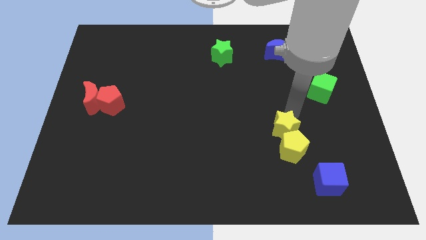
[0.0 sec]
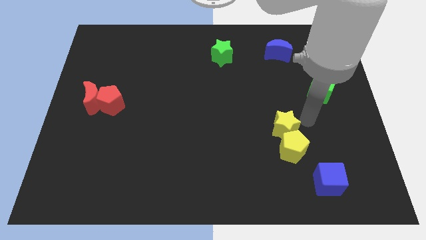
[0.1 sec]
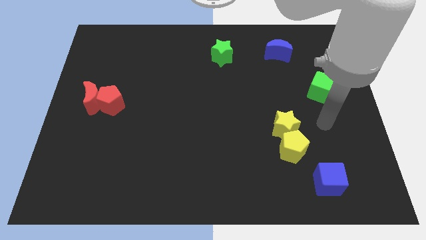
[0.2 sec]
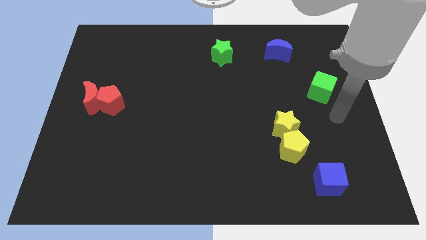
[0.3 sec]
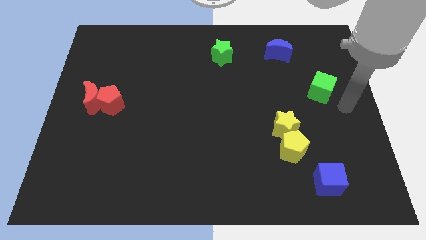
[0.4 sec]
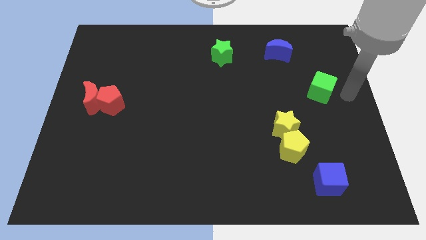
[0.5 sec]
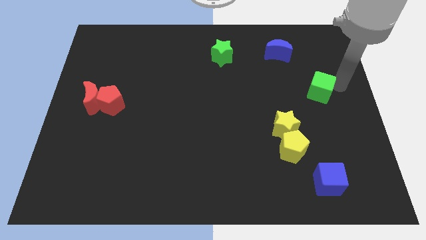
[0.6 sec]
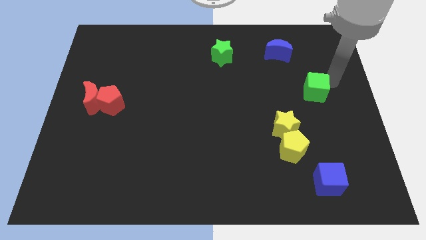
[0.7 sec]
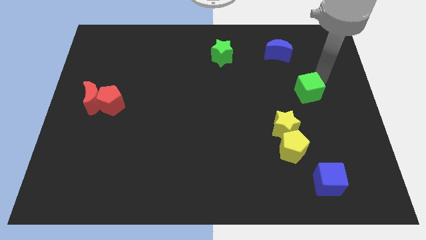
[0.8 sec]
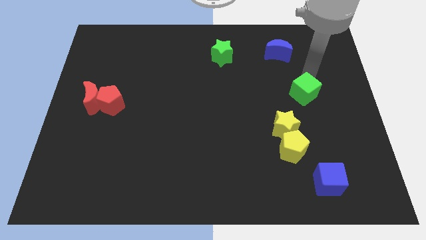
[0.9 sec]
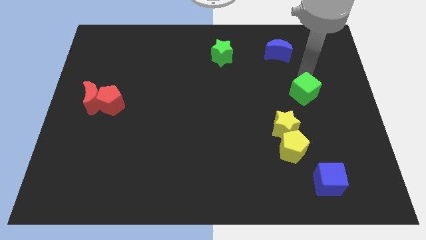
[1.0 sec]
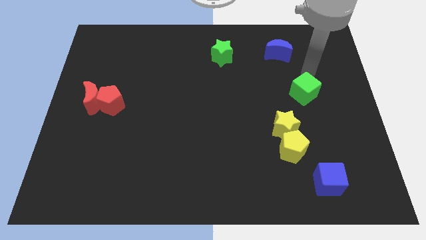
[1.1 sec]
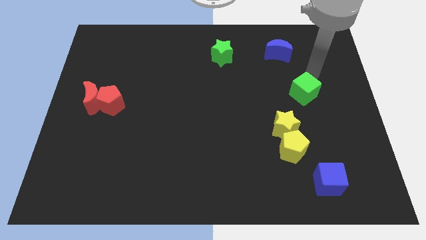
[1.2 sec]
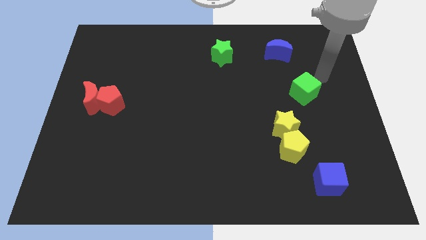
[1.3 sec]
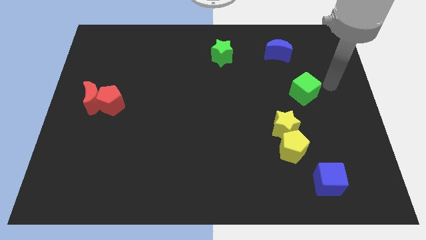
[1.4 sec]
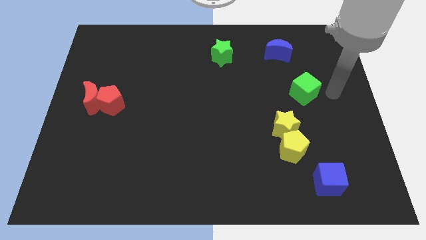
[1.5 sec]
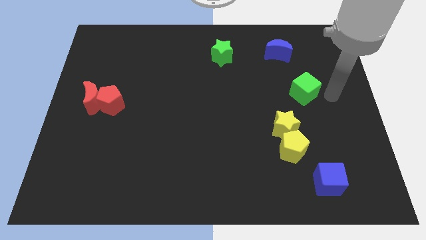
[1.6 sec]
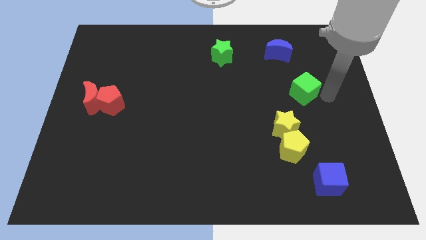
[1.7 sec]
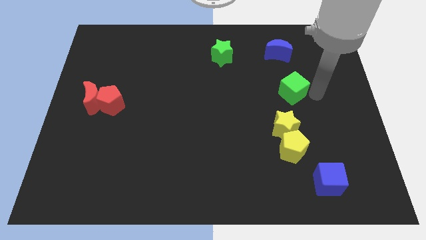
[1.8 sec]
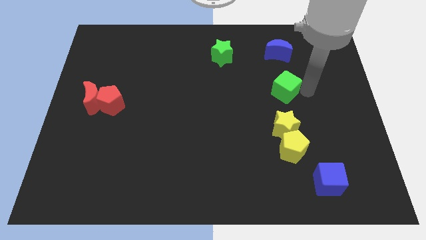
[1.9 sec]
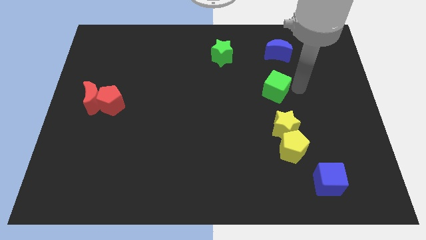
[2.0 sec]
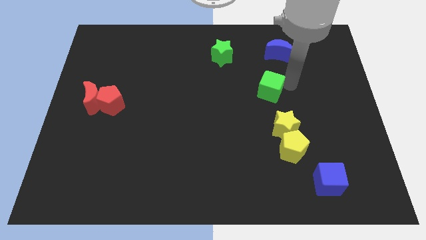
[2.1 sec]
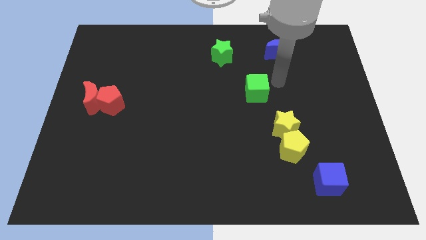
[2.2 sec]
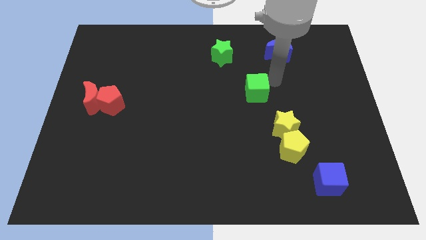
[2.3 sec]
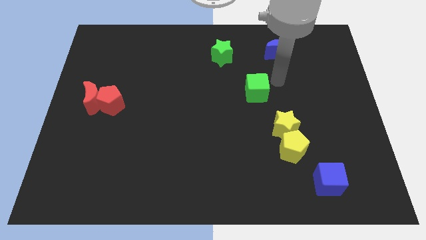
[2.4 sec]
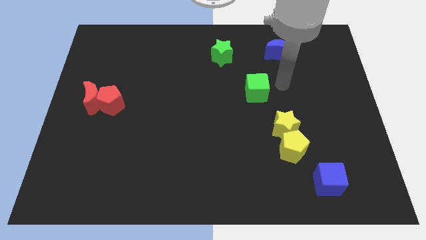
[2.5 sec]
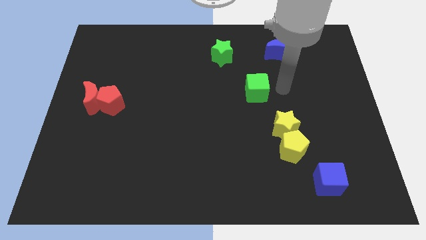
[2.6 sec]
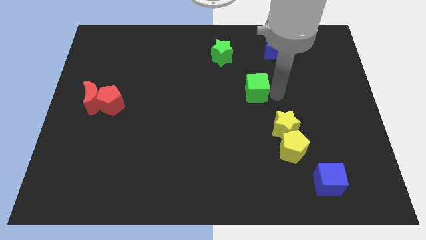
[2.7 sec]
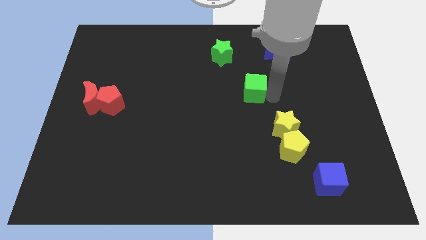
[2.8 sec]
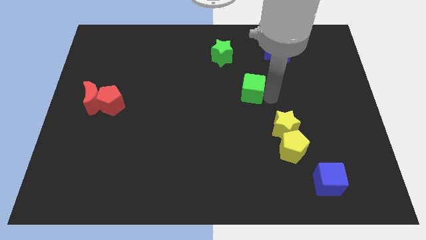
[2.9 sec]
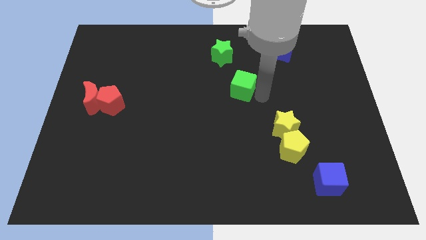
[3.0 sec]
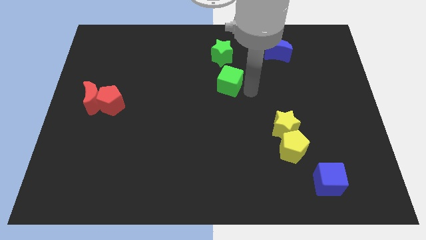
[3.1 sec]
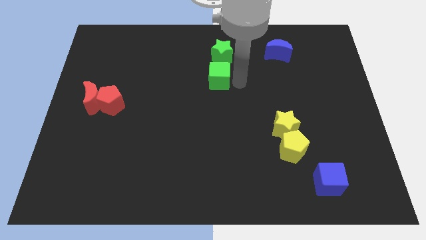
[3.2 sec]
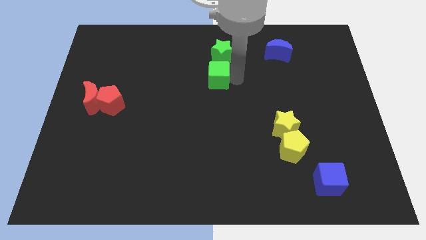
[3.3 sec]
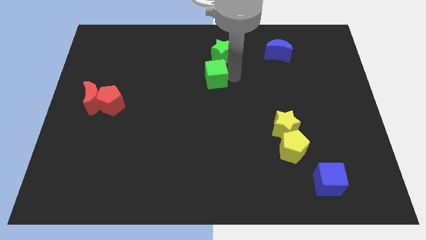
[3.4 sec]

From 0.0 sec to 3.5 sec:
place the green cube below the green star

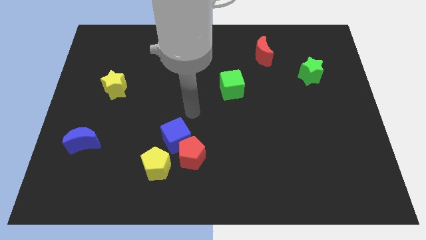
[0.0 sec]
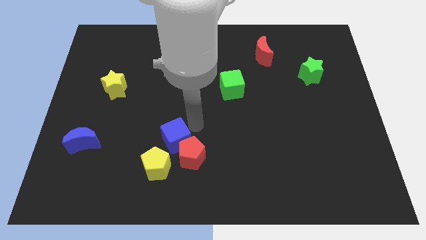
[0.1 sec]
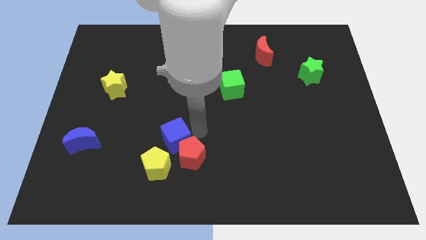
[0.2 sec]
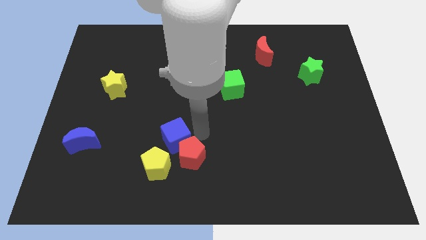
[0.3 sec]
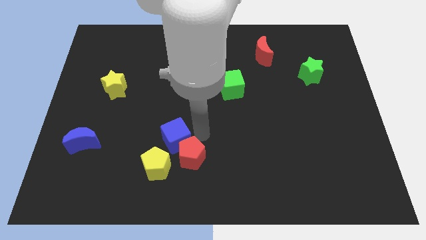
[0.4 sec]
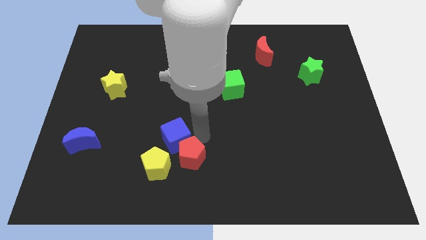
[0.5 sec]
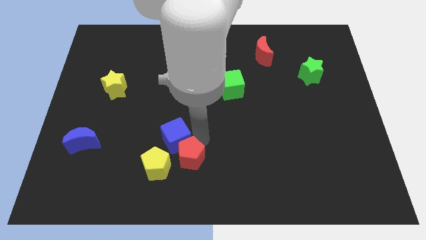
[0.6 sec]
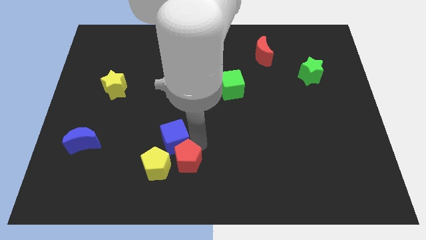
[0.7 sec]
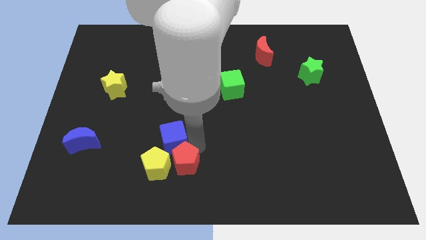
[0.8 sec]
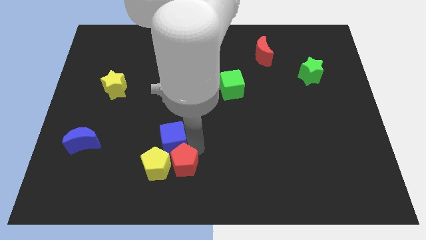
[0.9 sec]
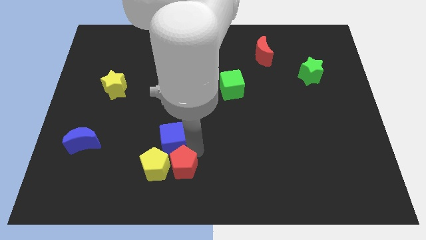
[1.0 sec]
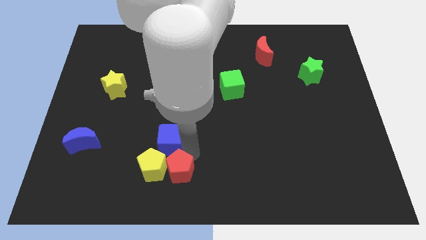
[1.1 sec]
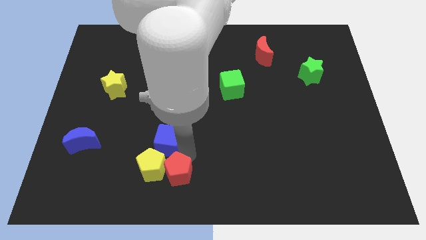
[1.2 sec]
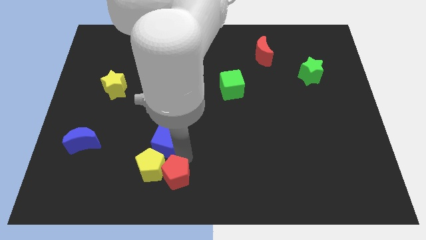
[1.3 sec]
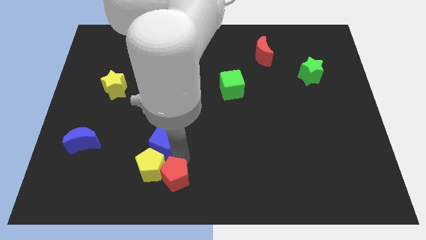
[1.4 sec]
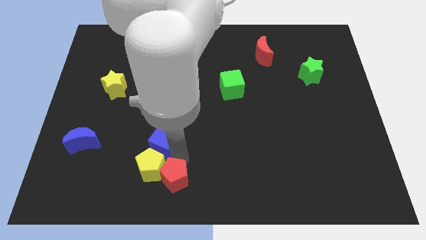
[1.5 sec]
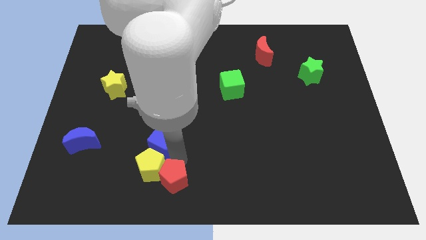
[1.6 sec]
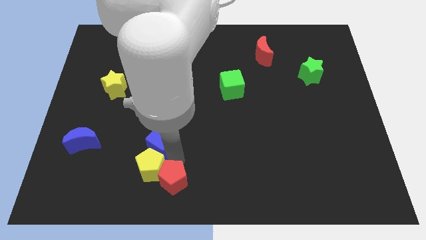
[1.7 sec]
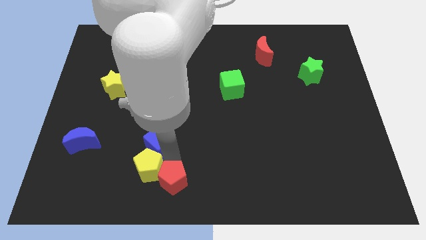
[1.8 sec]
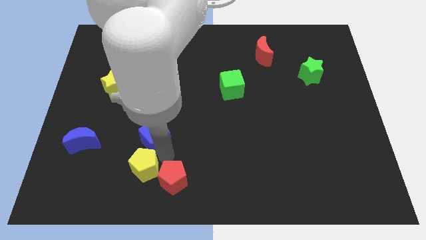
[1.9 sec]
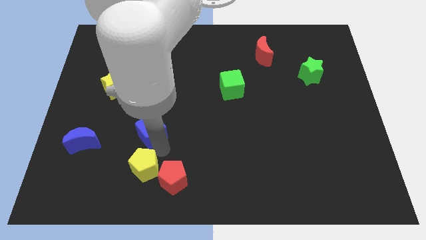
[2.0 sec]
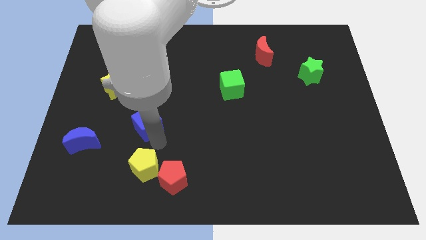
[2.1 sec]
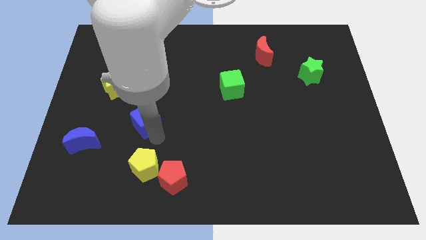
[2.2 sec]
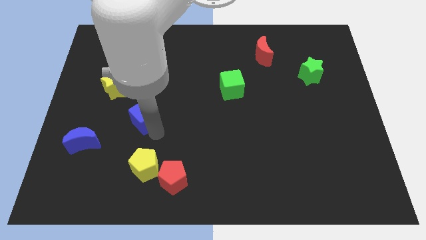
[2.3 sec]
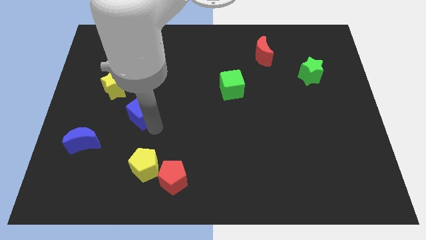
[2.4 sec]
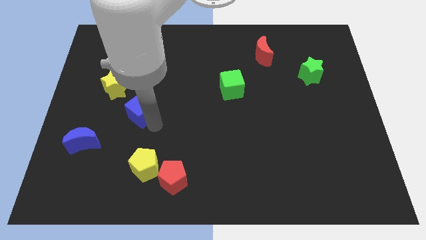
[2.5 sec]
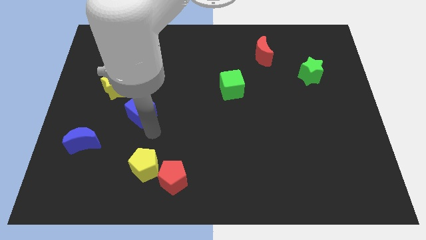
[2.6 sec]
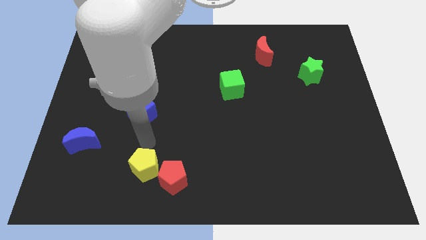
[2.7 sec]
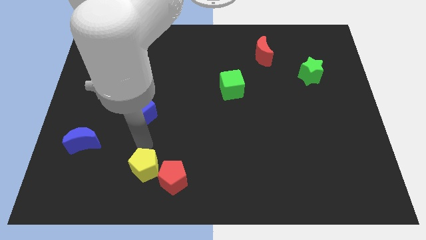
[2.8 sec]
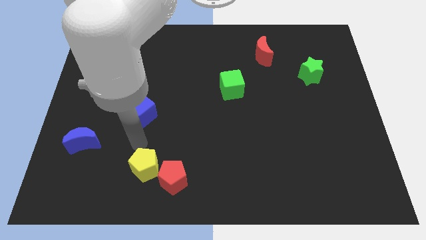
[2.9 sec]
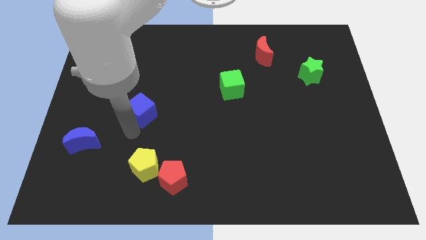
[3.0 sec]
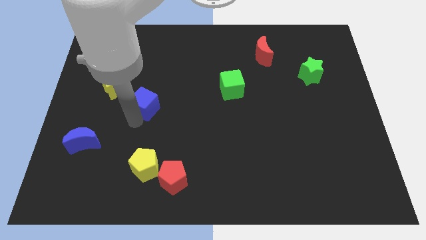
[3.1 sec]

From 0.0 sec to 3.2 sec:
place the blue cube in between the yellow star and yellow pentagon

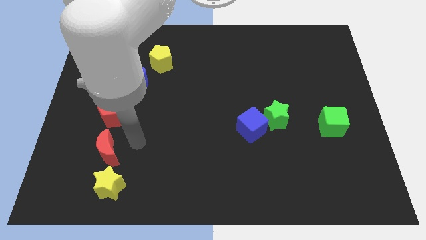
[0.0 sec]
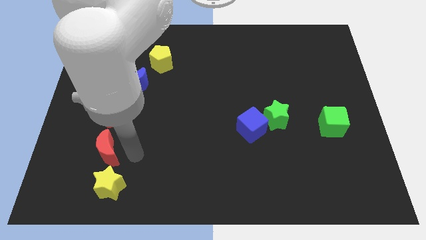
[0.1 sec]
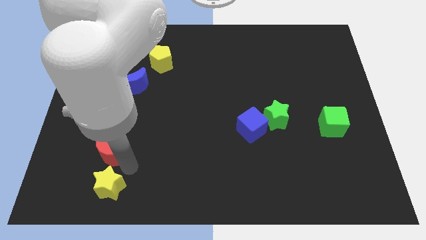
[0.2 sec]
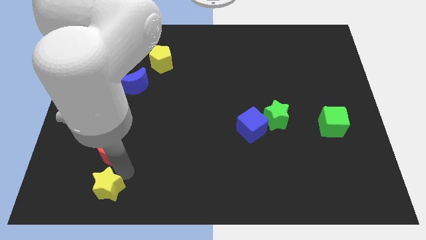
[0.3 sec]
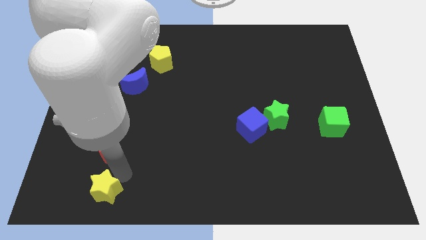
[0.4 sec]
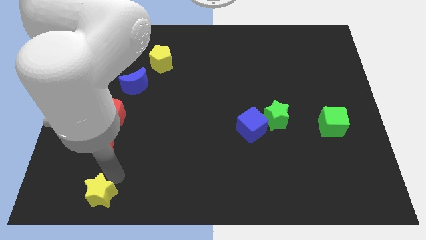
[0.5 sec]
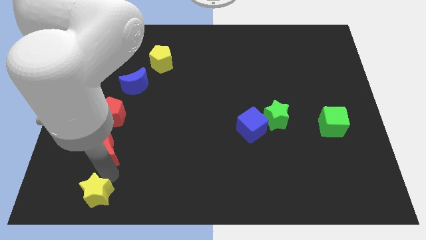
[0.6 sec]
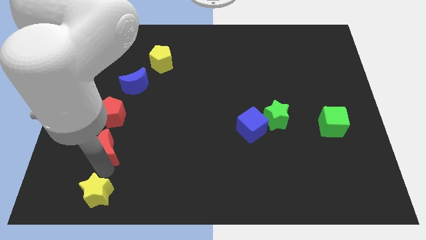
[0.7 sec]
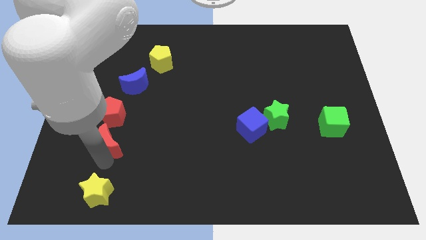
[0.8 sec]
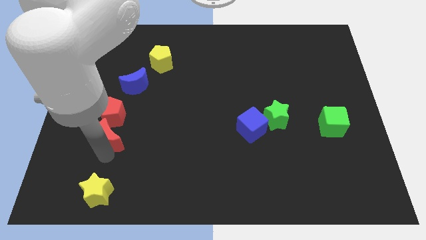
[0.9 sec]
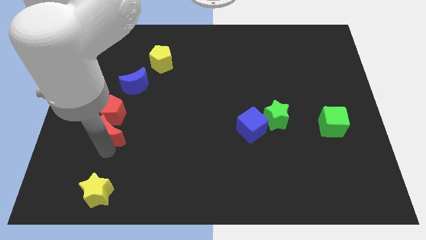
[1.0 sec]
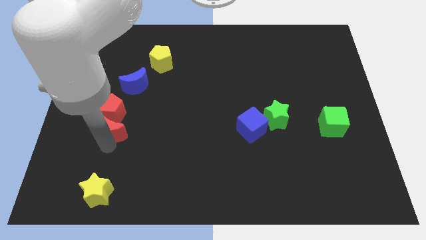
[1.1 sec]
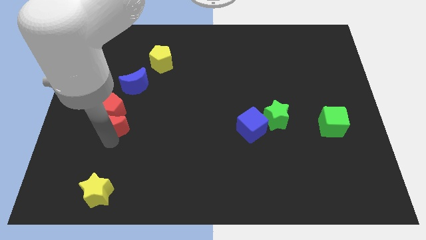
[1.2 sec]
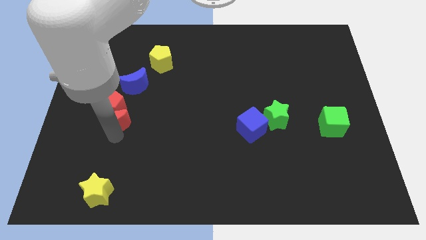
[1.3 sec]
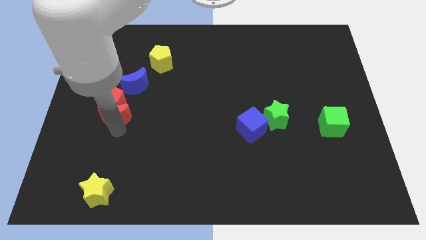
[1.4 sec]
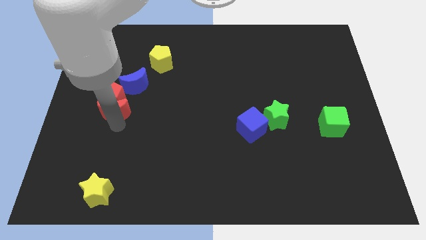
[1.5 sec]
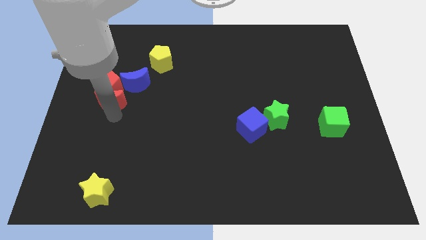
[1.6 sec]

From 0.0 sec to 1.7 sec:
separate the yellow star and the red blocks to the top

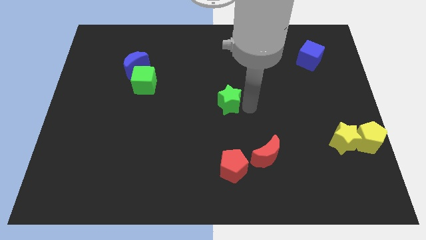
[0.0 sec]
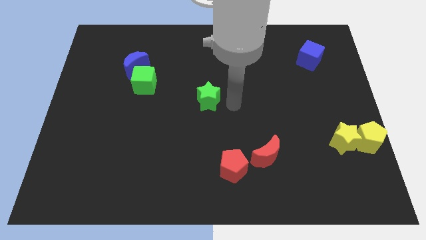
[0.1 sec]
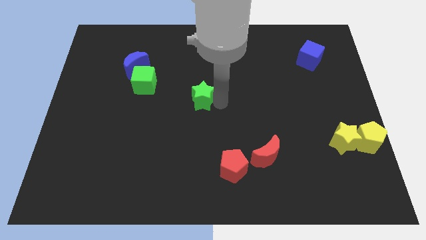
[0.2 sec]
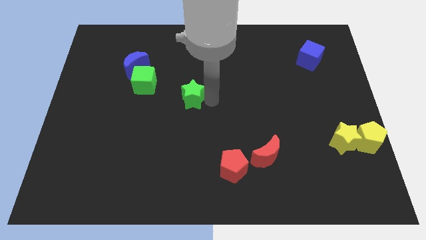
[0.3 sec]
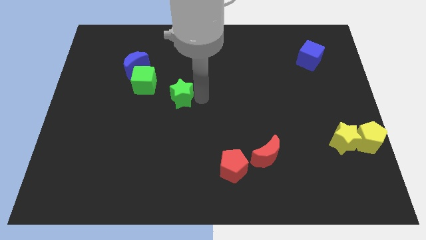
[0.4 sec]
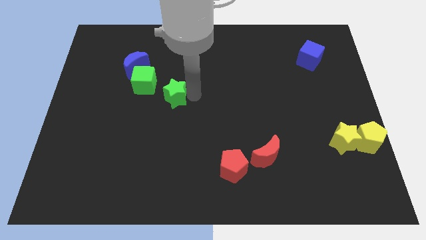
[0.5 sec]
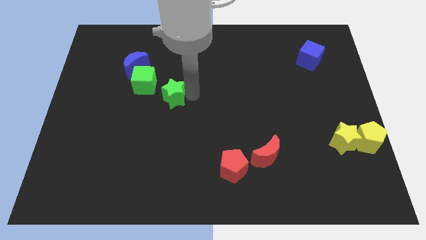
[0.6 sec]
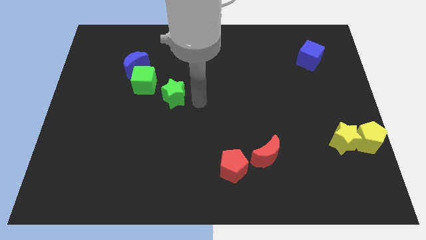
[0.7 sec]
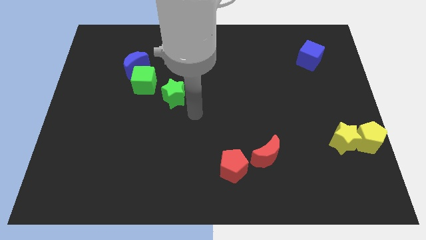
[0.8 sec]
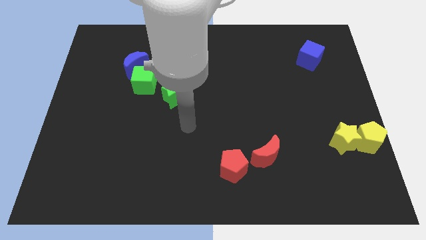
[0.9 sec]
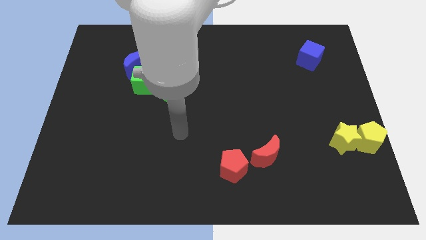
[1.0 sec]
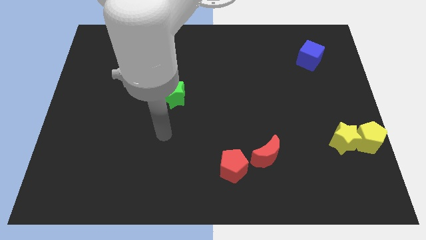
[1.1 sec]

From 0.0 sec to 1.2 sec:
move green star towards green cube
